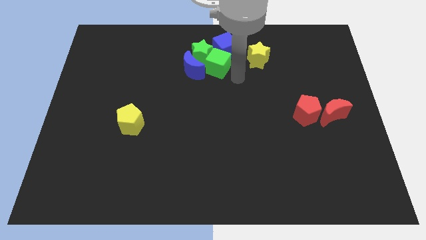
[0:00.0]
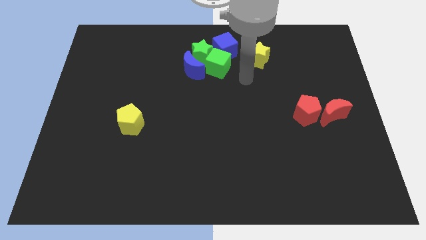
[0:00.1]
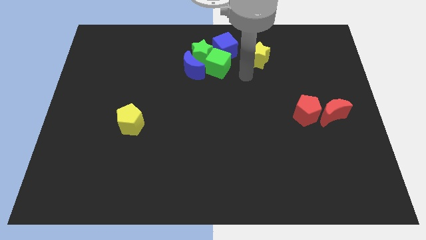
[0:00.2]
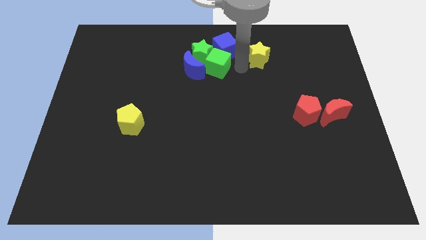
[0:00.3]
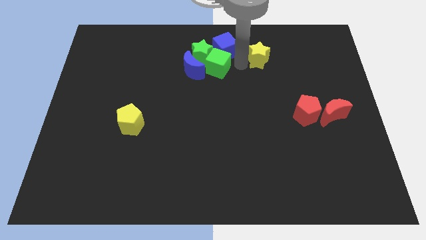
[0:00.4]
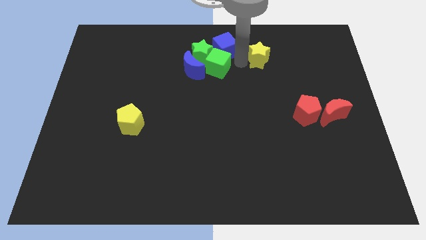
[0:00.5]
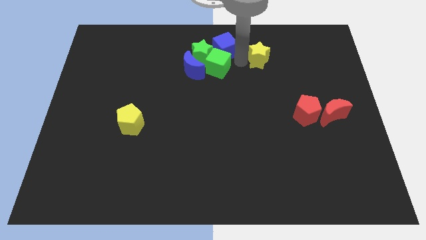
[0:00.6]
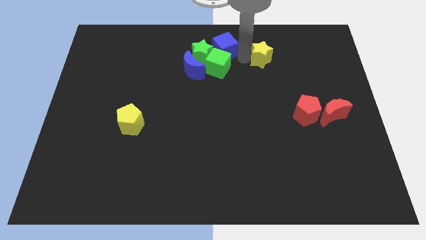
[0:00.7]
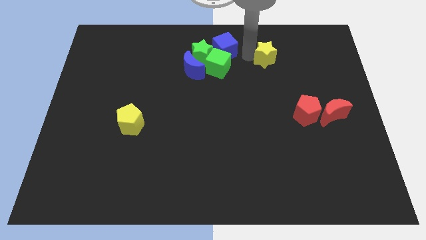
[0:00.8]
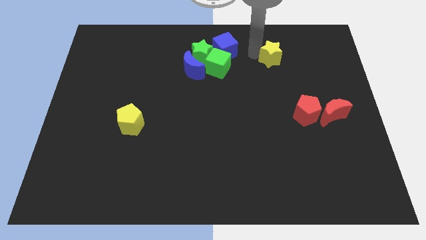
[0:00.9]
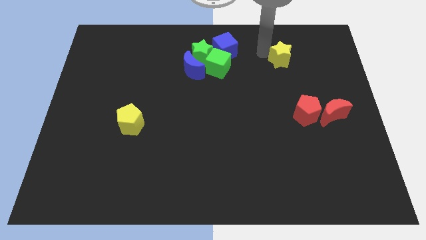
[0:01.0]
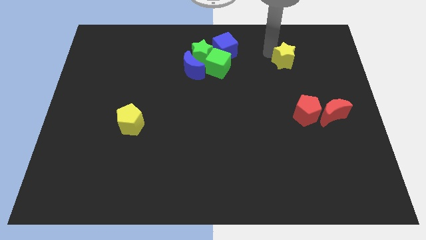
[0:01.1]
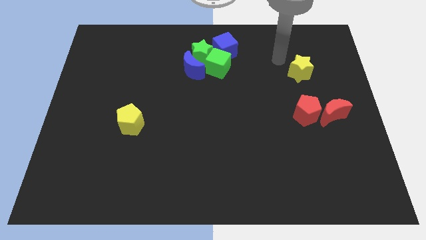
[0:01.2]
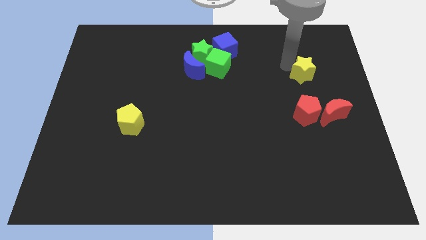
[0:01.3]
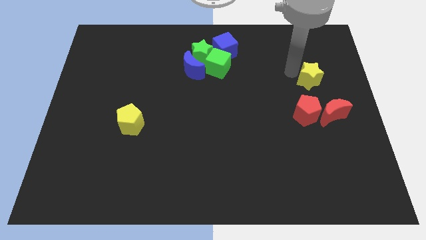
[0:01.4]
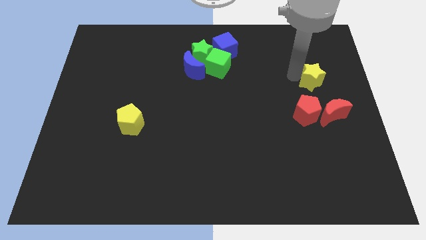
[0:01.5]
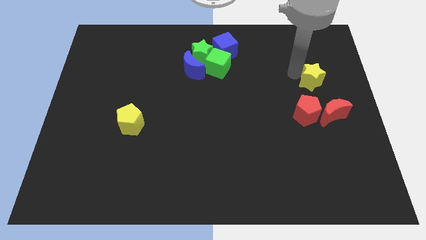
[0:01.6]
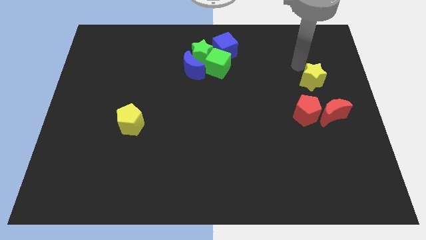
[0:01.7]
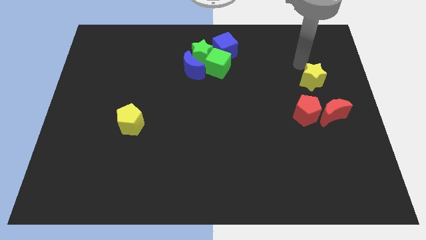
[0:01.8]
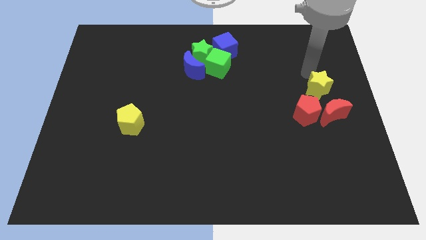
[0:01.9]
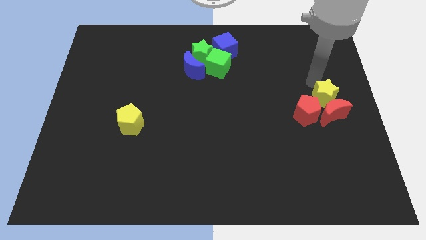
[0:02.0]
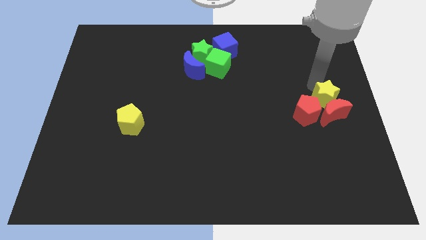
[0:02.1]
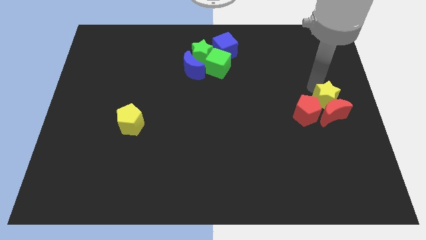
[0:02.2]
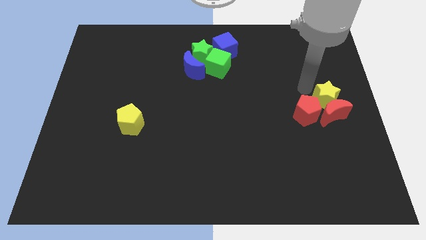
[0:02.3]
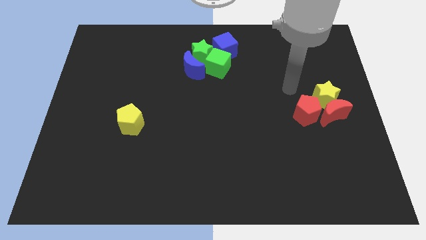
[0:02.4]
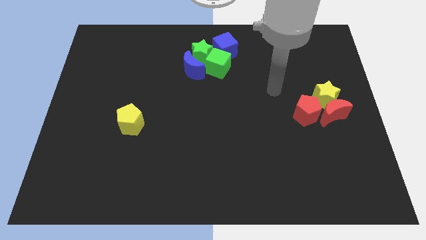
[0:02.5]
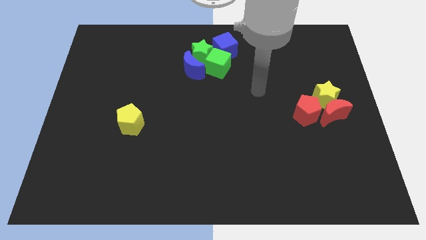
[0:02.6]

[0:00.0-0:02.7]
push yellow star into red pentagon and red crescent

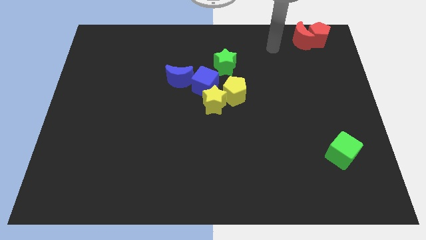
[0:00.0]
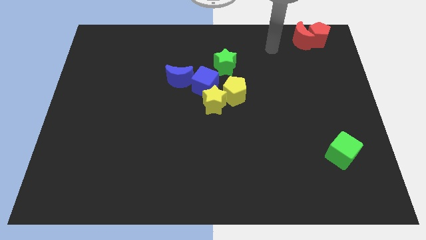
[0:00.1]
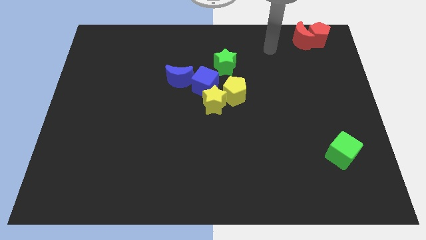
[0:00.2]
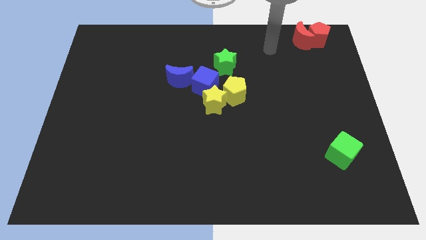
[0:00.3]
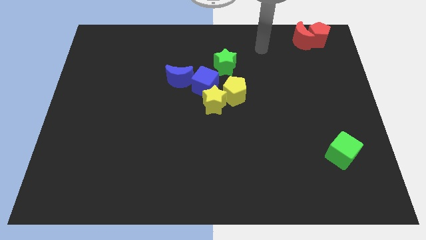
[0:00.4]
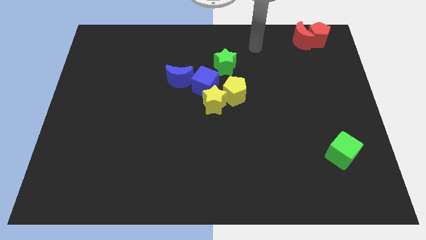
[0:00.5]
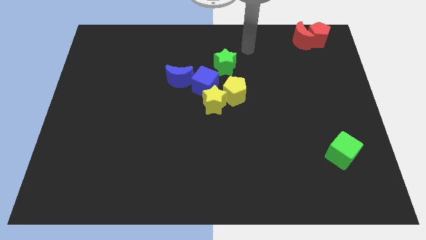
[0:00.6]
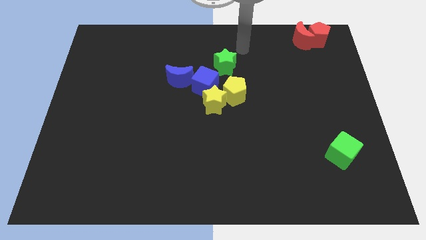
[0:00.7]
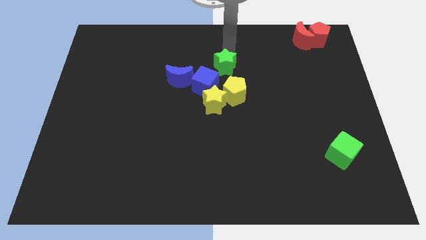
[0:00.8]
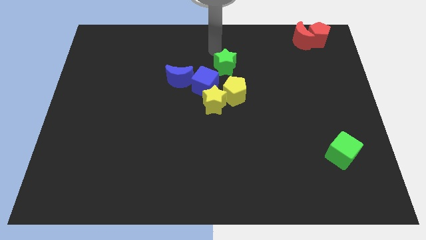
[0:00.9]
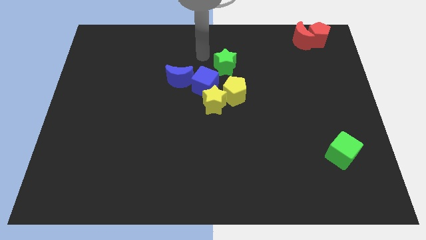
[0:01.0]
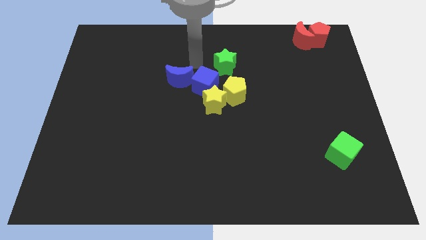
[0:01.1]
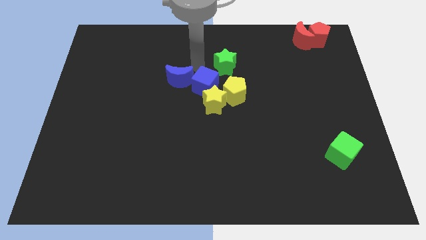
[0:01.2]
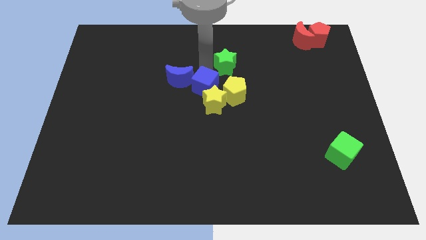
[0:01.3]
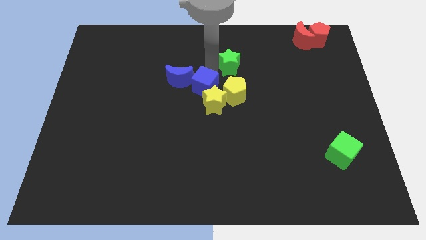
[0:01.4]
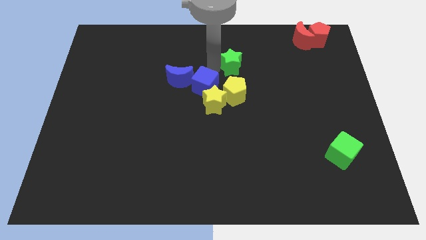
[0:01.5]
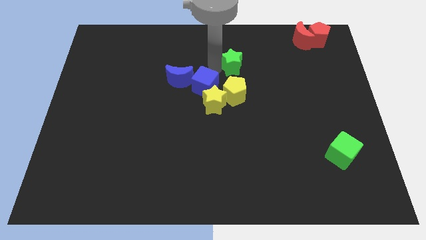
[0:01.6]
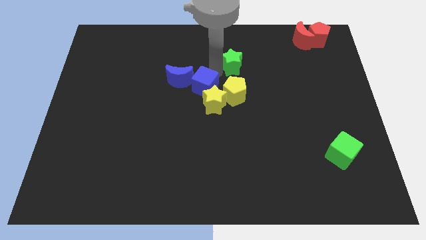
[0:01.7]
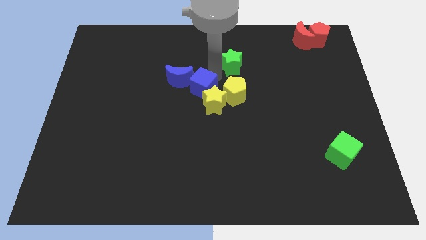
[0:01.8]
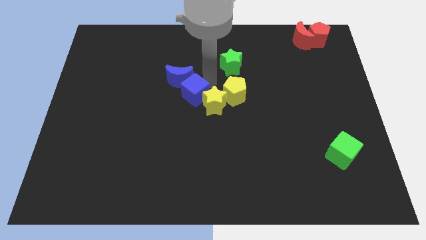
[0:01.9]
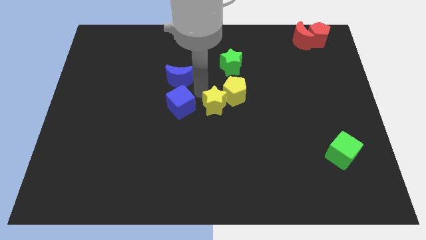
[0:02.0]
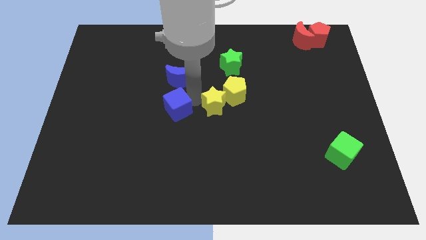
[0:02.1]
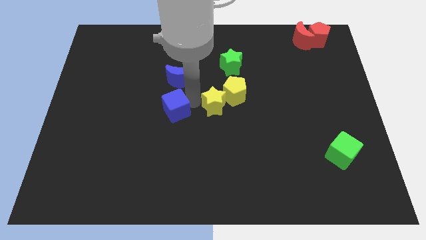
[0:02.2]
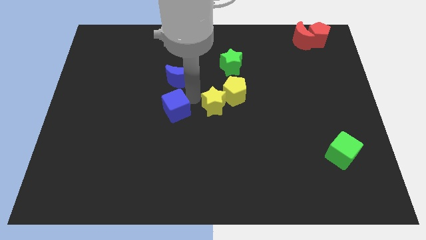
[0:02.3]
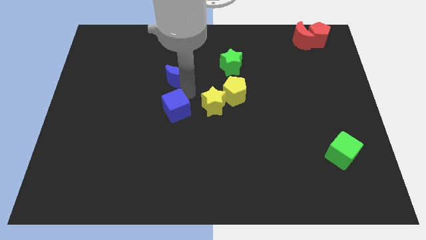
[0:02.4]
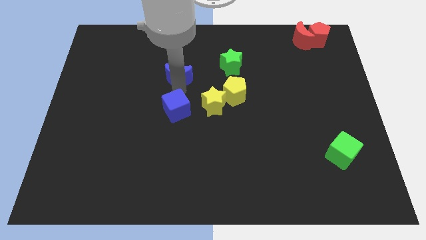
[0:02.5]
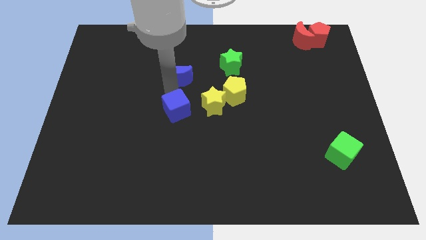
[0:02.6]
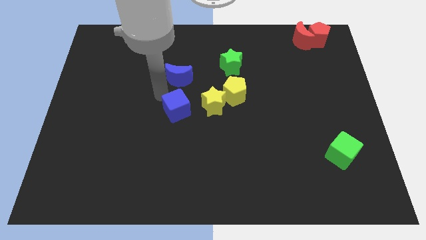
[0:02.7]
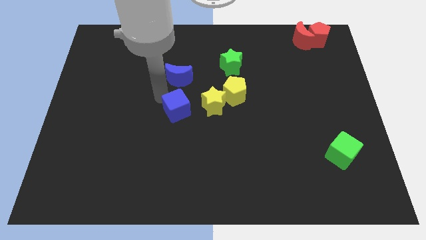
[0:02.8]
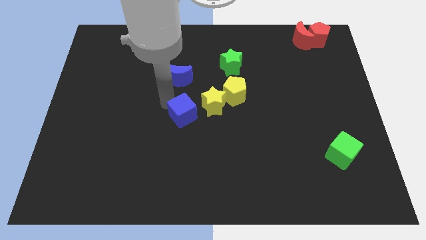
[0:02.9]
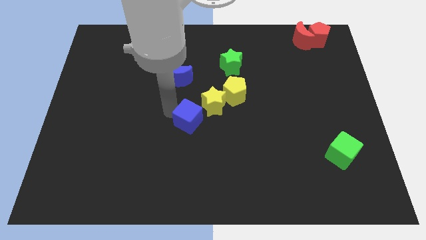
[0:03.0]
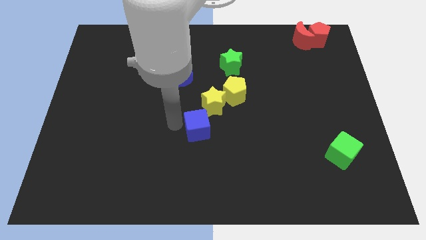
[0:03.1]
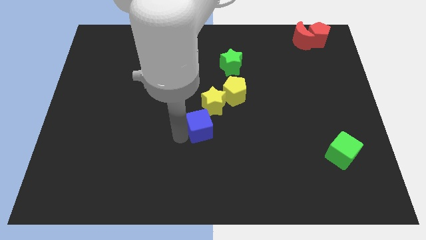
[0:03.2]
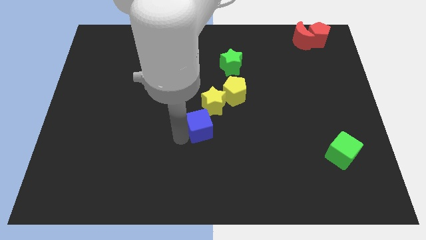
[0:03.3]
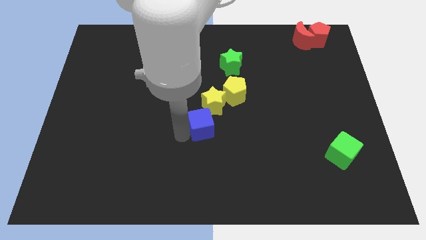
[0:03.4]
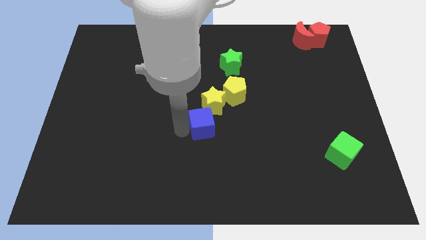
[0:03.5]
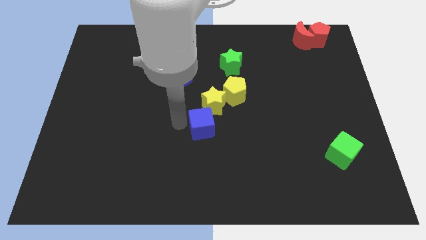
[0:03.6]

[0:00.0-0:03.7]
place blue cube to the bottom left of yellow star

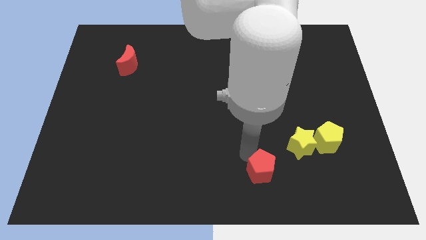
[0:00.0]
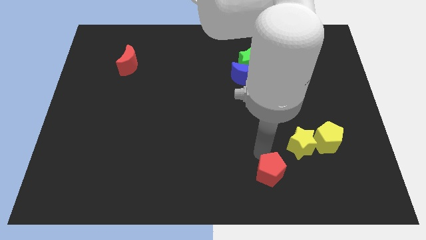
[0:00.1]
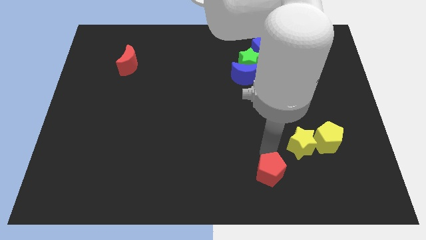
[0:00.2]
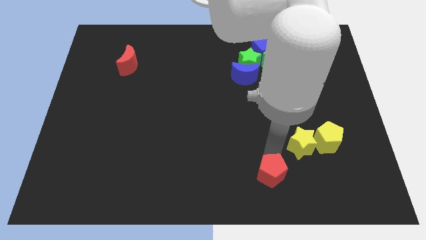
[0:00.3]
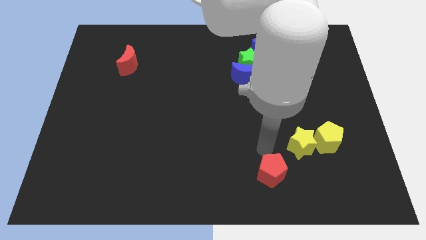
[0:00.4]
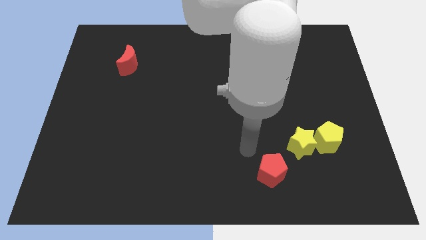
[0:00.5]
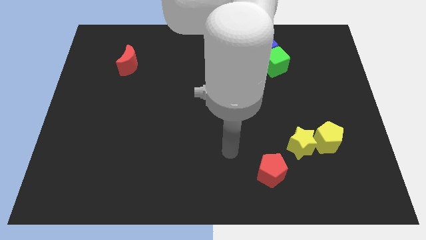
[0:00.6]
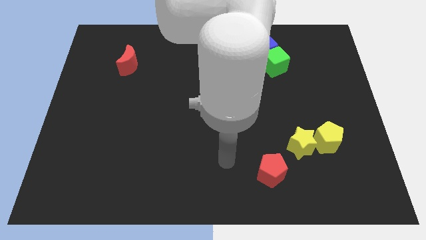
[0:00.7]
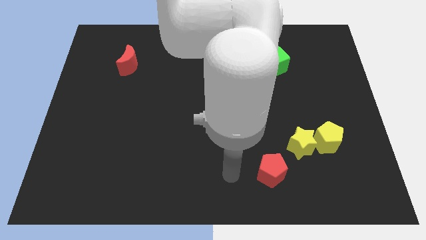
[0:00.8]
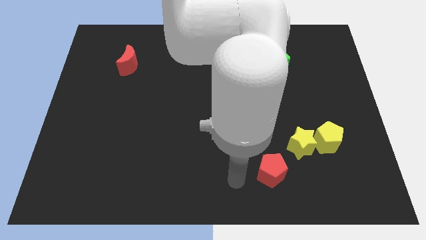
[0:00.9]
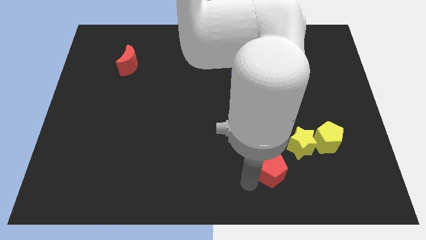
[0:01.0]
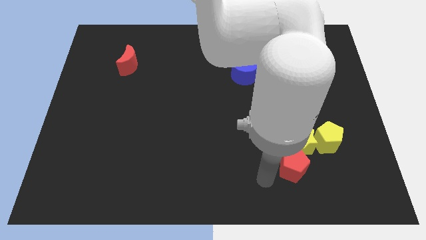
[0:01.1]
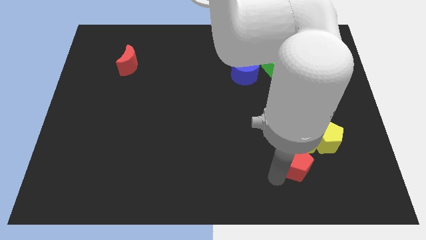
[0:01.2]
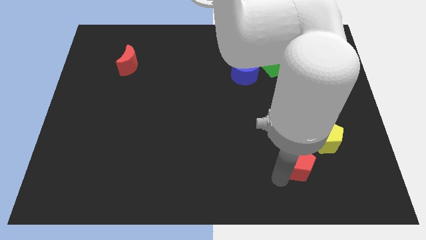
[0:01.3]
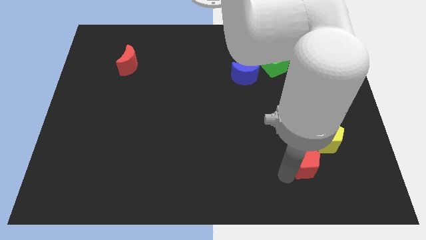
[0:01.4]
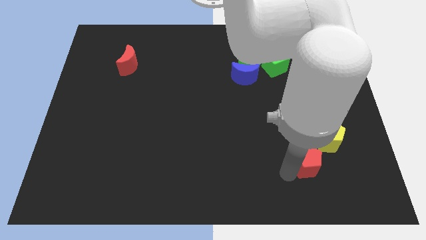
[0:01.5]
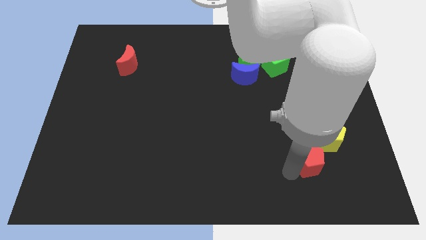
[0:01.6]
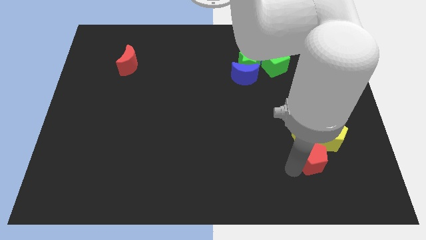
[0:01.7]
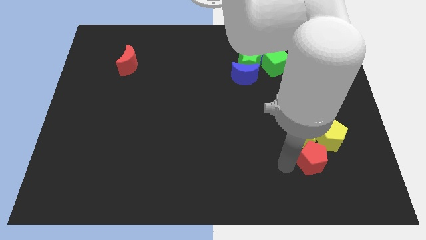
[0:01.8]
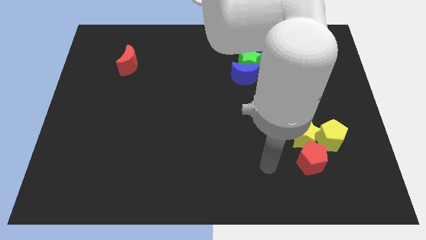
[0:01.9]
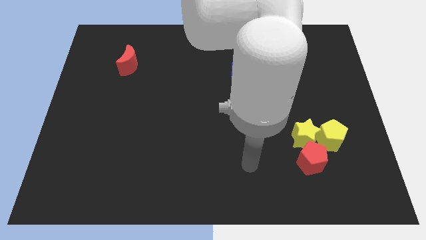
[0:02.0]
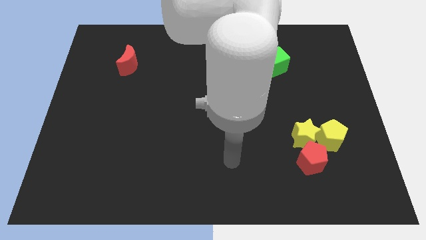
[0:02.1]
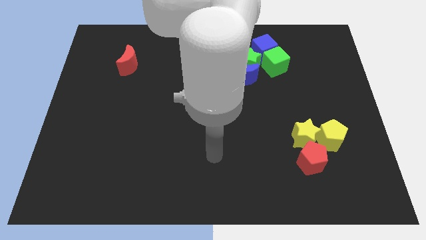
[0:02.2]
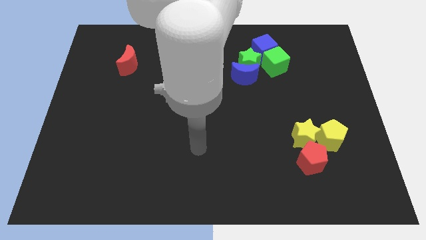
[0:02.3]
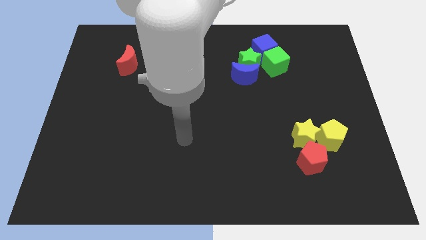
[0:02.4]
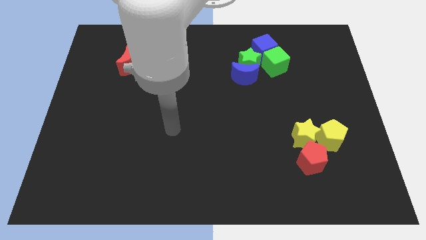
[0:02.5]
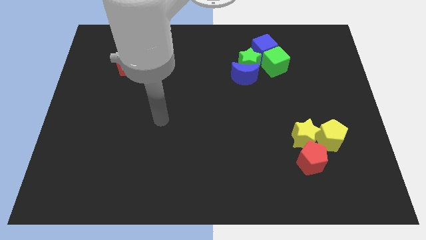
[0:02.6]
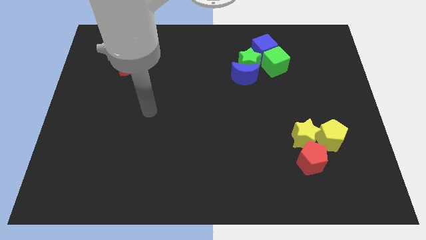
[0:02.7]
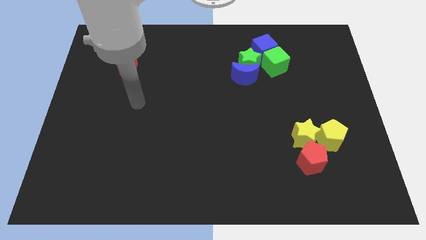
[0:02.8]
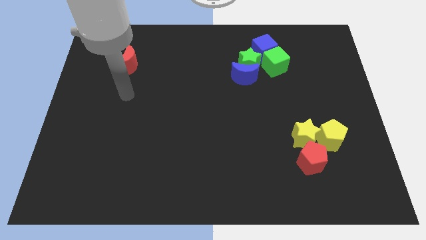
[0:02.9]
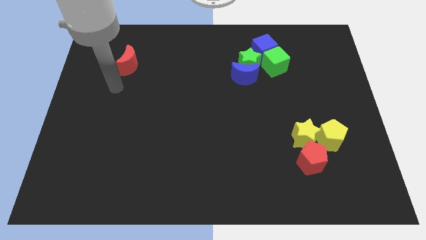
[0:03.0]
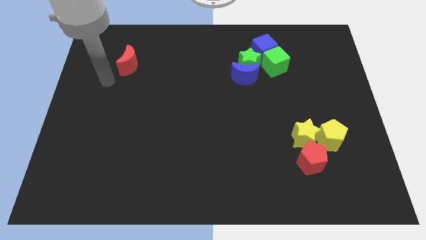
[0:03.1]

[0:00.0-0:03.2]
push the red pentagon into the yellow star and yellow pentagon
